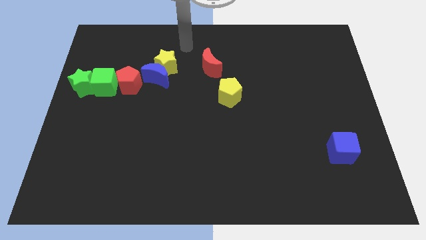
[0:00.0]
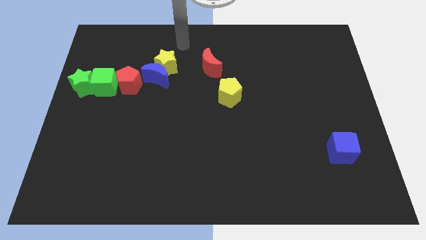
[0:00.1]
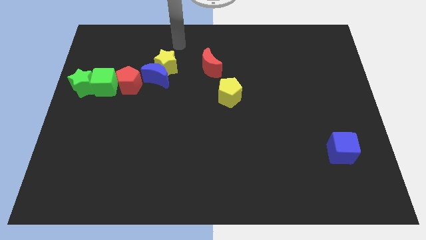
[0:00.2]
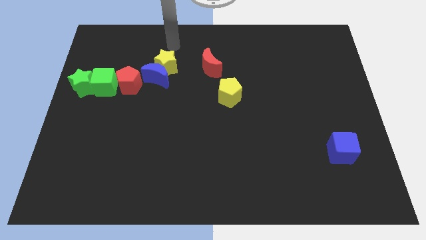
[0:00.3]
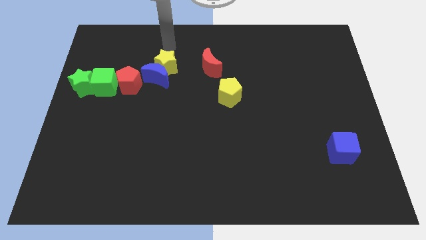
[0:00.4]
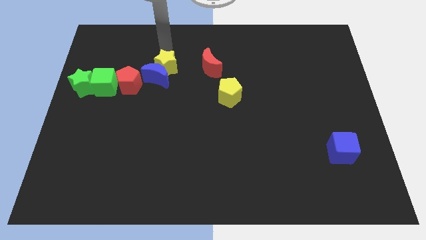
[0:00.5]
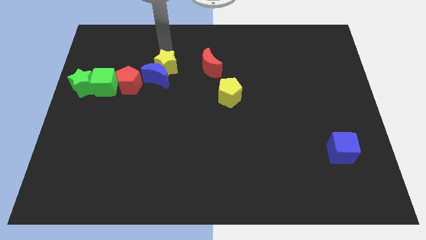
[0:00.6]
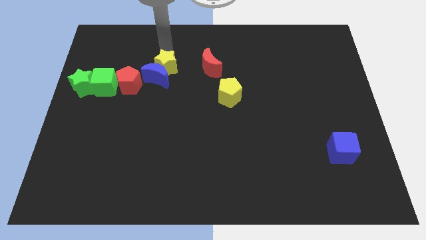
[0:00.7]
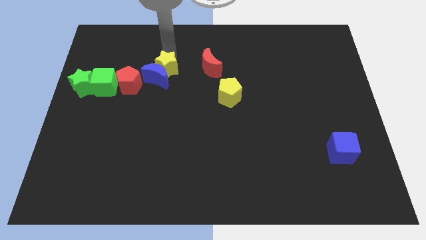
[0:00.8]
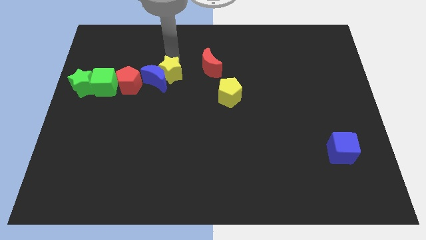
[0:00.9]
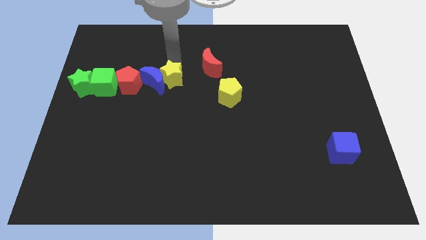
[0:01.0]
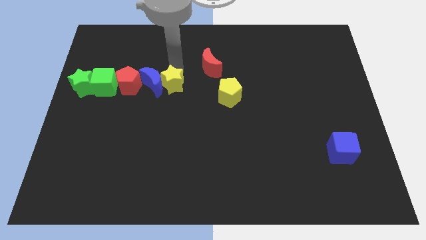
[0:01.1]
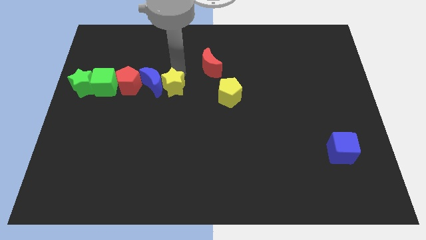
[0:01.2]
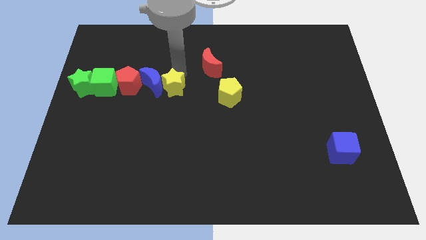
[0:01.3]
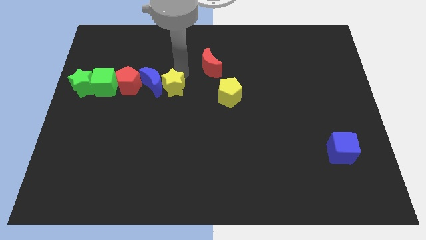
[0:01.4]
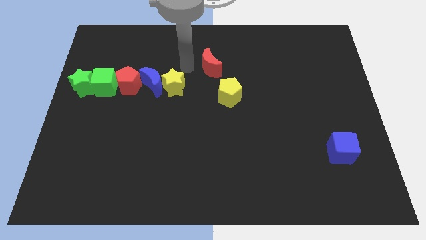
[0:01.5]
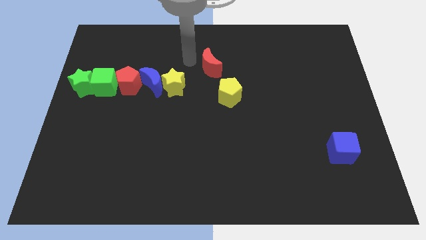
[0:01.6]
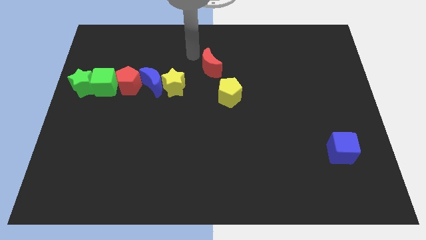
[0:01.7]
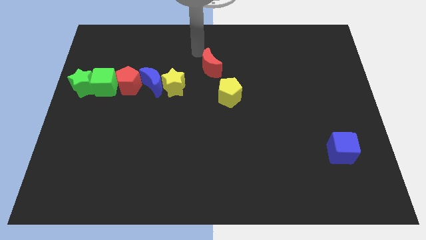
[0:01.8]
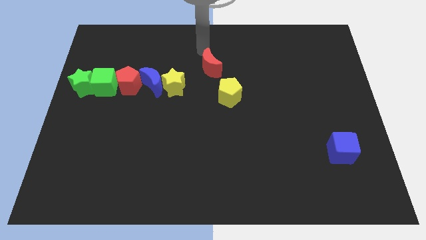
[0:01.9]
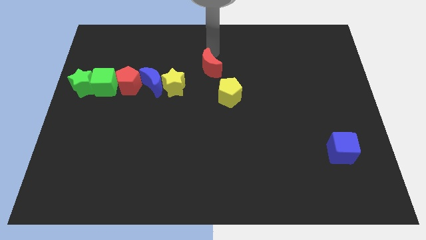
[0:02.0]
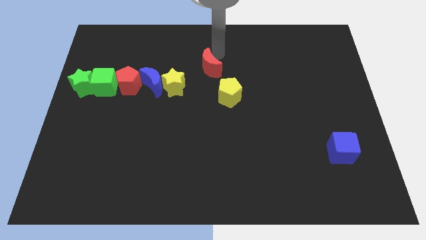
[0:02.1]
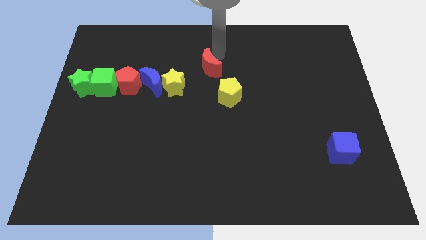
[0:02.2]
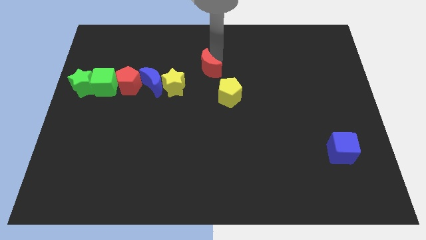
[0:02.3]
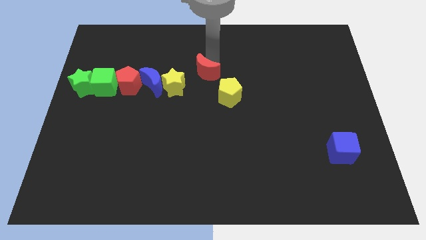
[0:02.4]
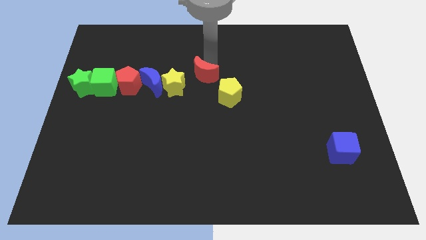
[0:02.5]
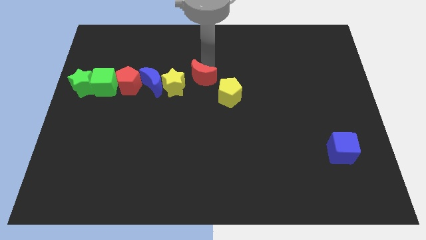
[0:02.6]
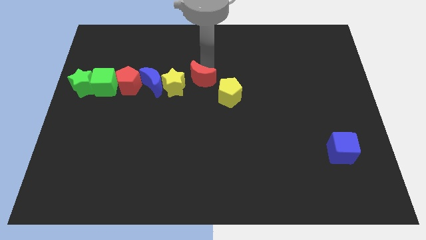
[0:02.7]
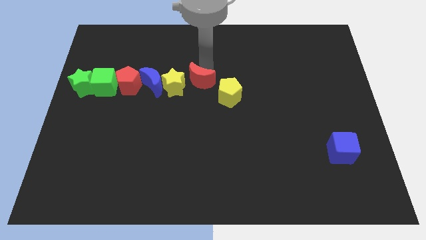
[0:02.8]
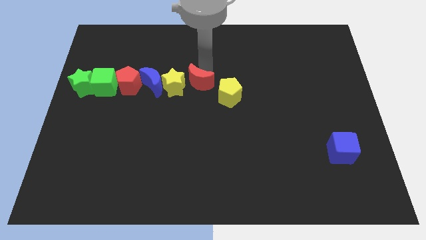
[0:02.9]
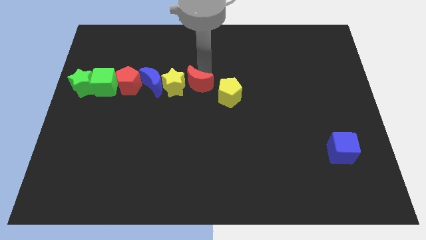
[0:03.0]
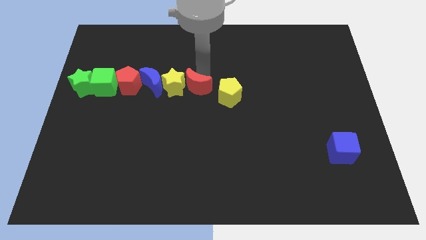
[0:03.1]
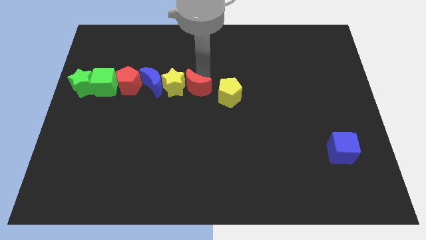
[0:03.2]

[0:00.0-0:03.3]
move red moon into yellow star

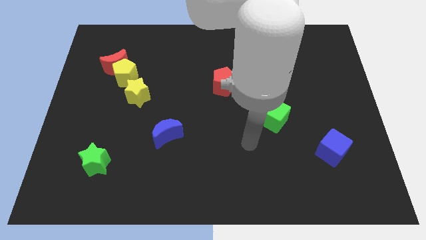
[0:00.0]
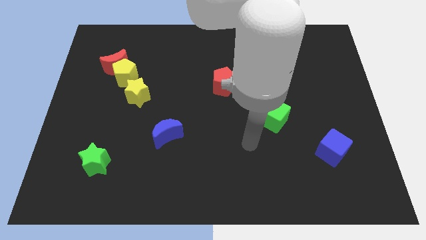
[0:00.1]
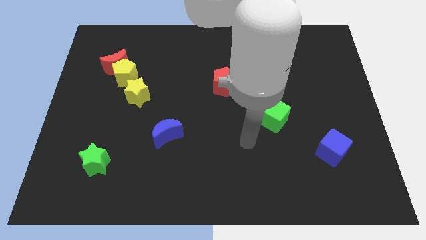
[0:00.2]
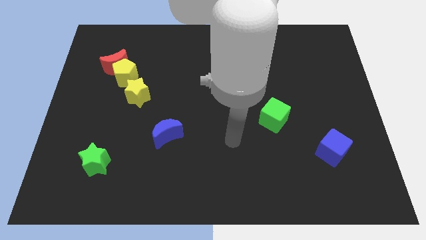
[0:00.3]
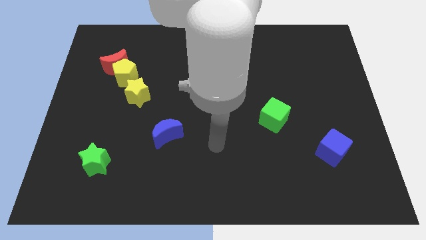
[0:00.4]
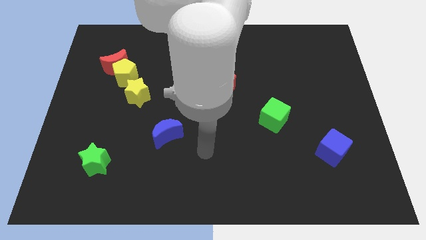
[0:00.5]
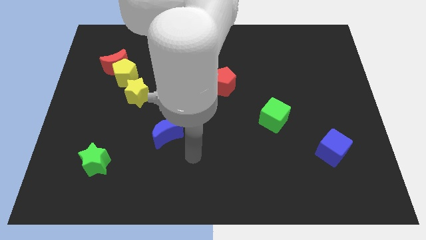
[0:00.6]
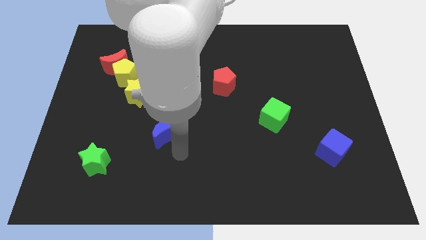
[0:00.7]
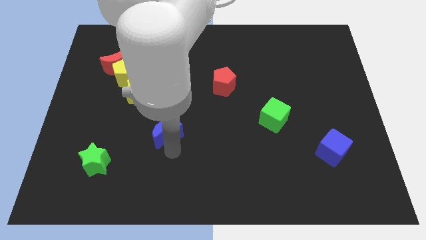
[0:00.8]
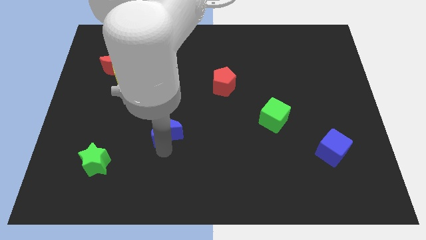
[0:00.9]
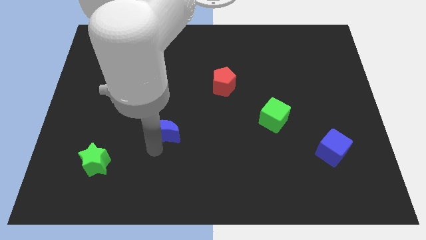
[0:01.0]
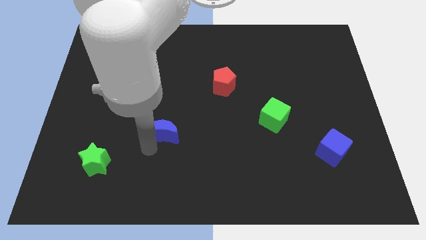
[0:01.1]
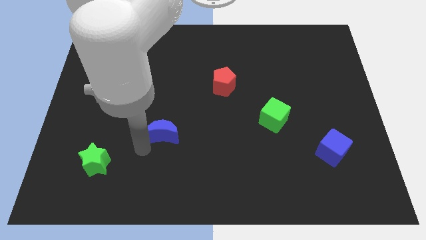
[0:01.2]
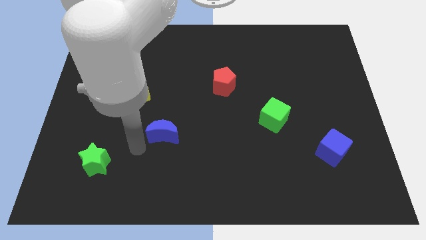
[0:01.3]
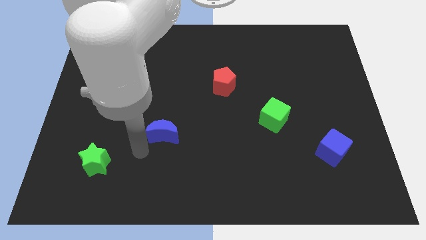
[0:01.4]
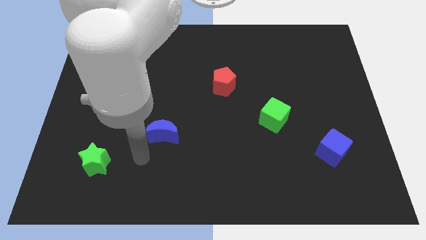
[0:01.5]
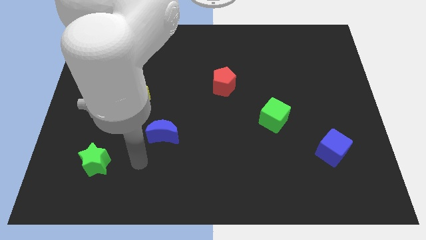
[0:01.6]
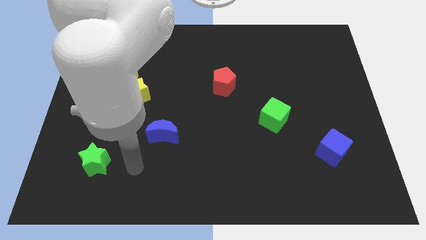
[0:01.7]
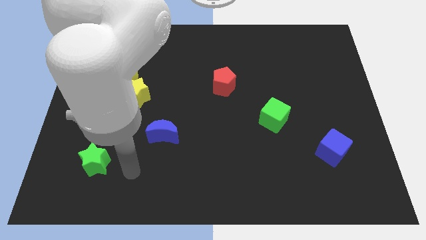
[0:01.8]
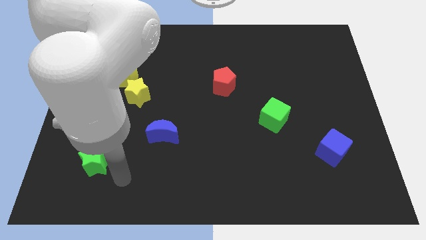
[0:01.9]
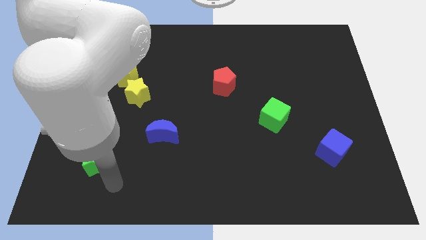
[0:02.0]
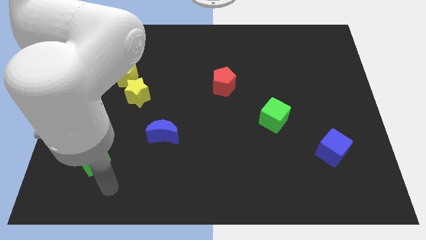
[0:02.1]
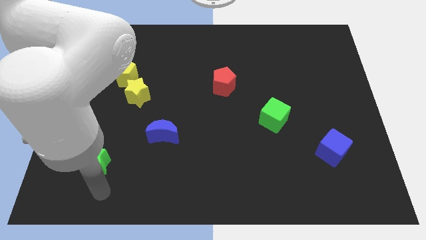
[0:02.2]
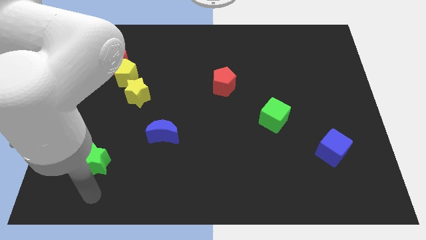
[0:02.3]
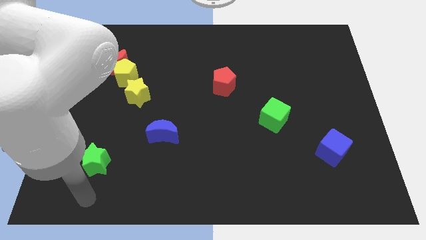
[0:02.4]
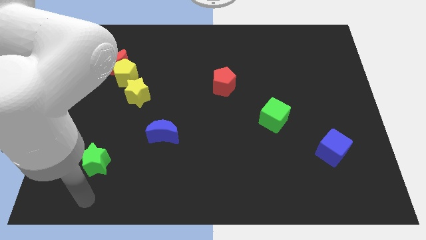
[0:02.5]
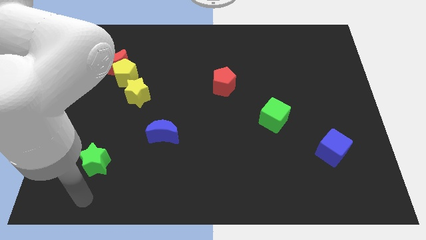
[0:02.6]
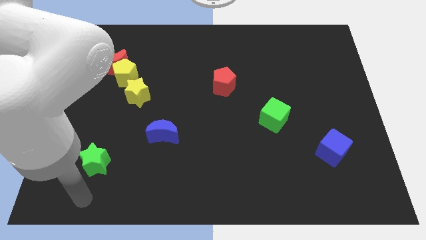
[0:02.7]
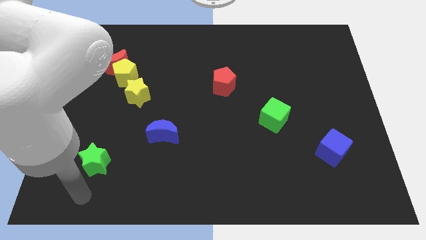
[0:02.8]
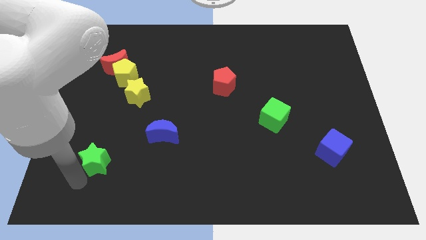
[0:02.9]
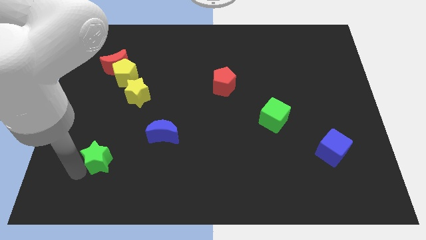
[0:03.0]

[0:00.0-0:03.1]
slightly touch the blue moon and green star

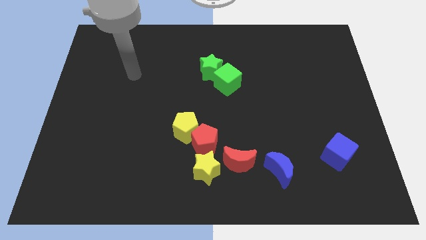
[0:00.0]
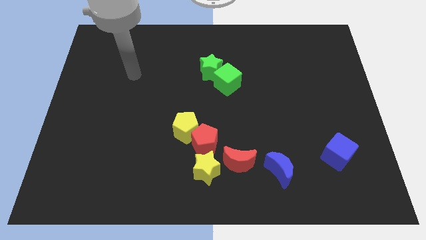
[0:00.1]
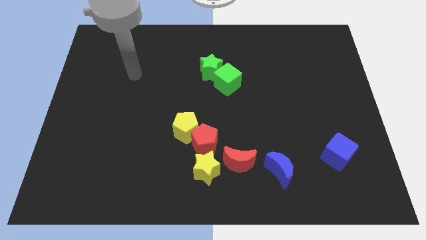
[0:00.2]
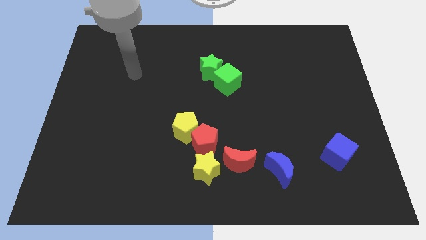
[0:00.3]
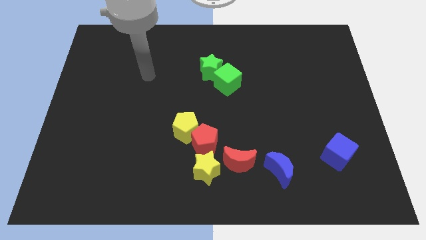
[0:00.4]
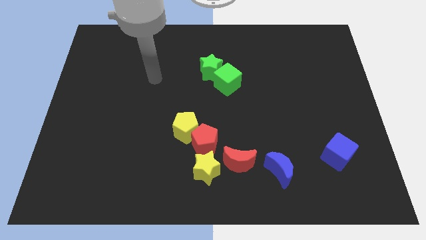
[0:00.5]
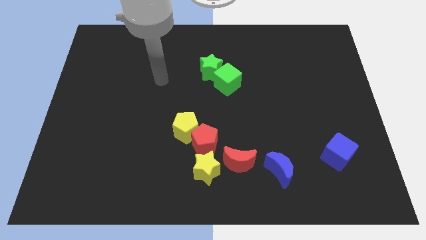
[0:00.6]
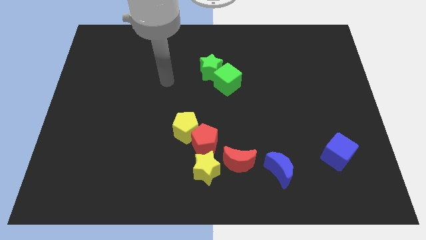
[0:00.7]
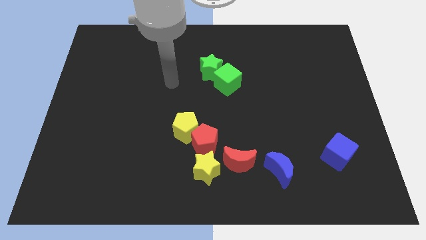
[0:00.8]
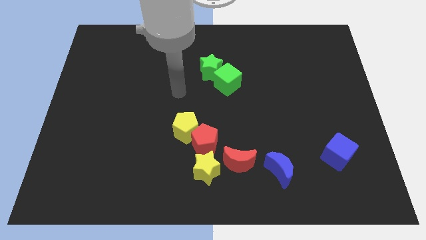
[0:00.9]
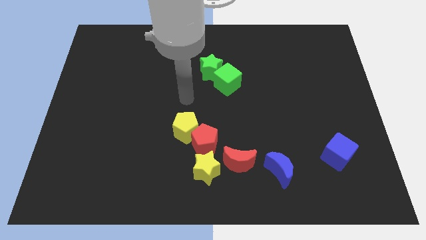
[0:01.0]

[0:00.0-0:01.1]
move your arm above to the yellow pentagon

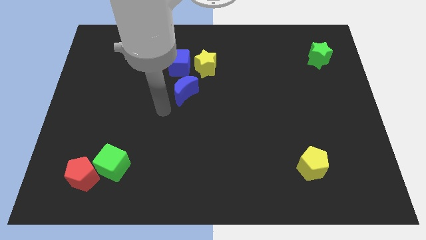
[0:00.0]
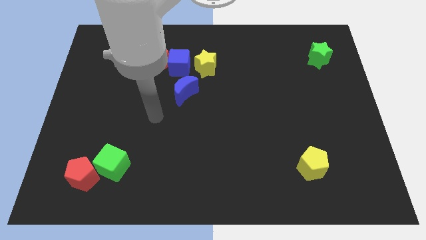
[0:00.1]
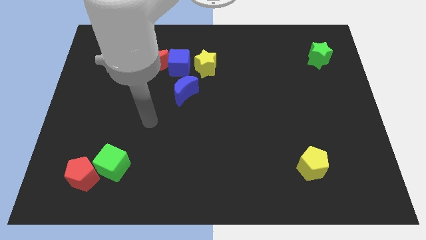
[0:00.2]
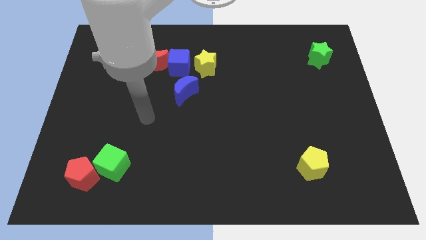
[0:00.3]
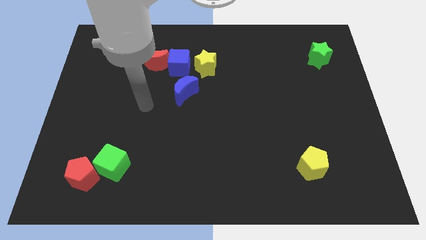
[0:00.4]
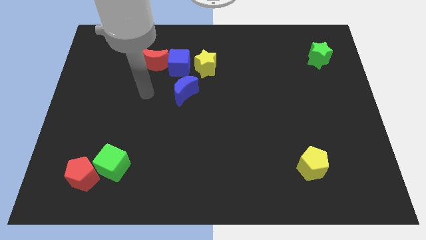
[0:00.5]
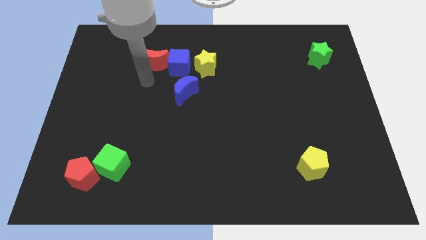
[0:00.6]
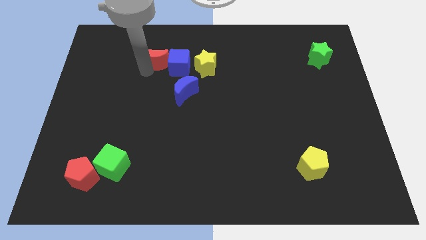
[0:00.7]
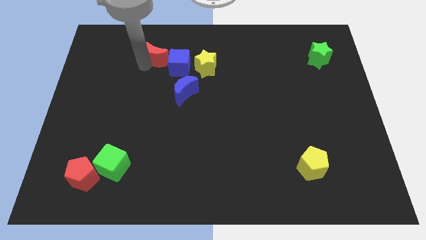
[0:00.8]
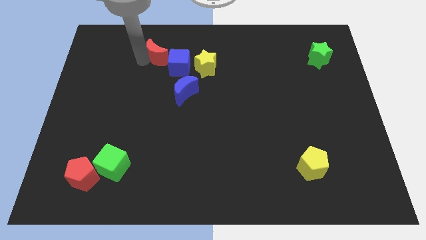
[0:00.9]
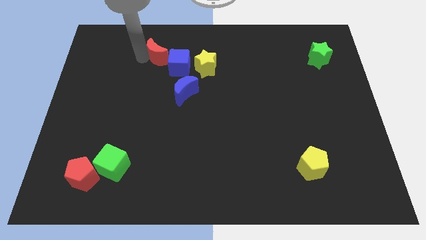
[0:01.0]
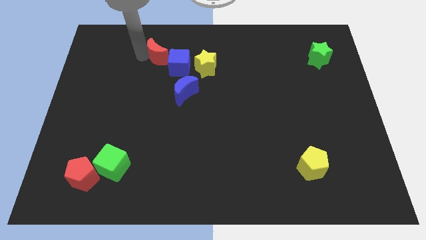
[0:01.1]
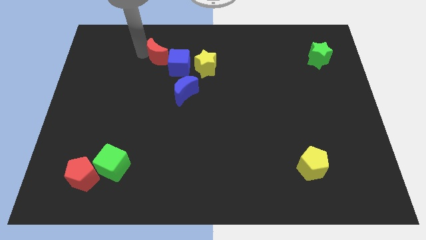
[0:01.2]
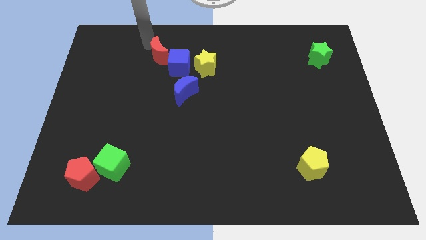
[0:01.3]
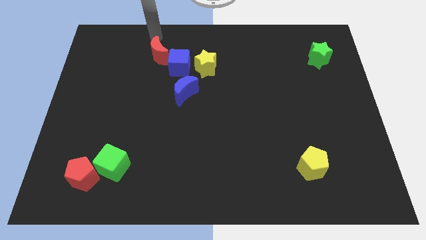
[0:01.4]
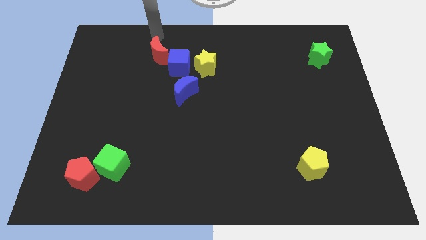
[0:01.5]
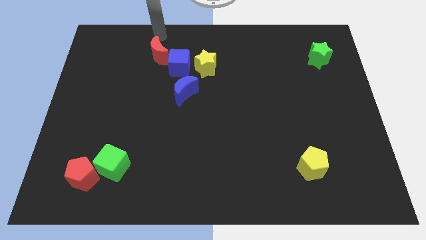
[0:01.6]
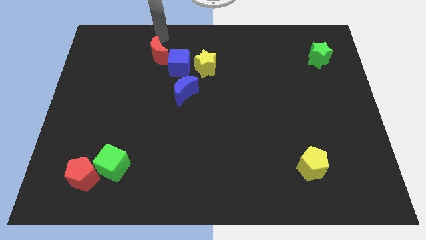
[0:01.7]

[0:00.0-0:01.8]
push the red crescent towards up
